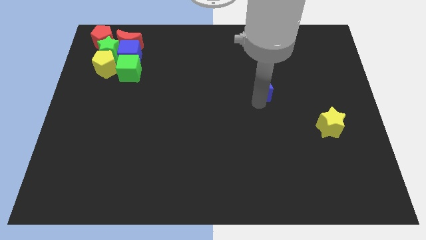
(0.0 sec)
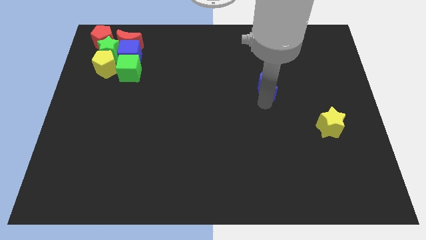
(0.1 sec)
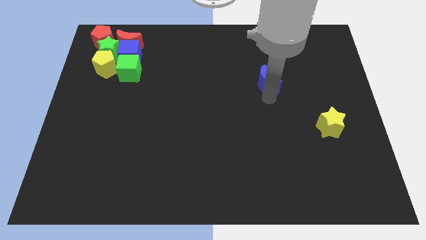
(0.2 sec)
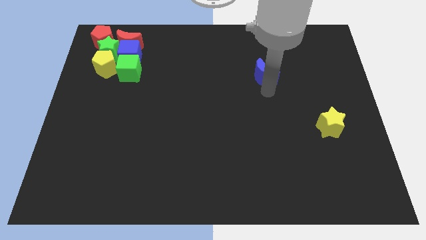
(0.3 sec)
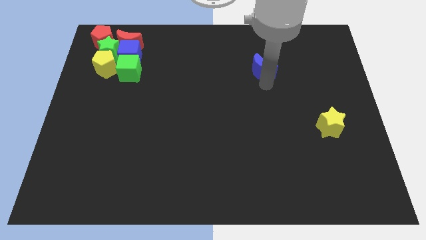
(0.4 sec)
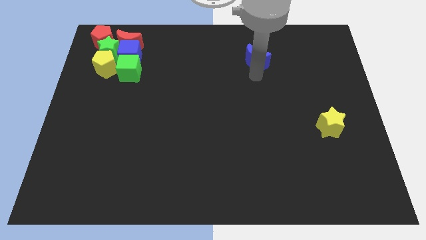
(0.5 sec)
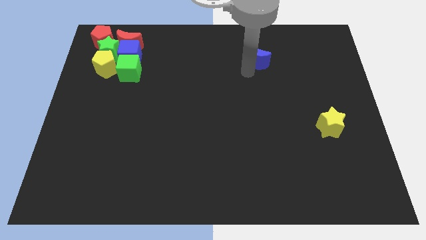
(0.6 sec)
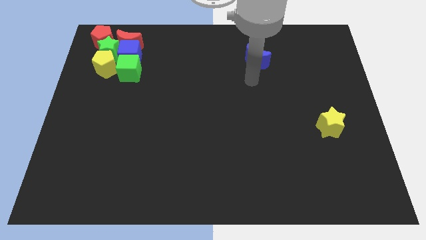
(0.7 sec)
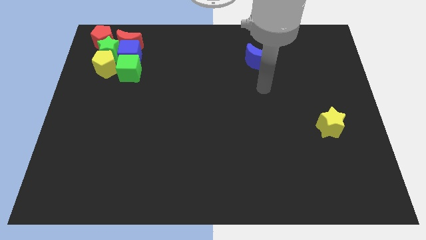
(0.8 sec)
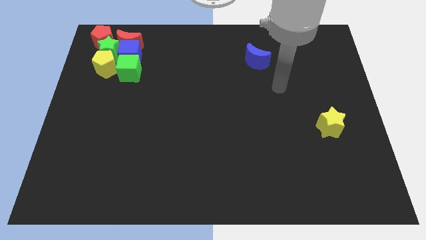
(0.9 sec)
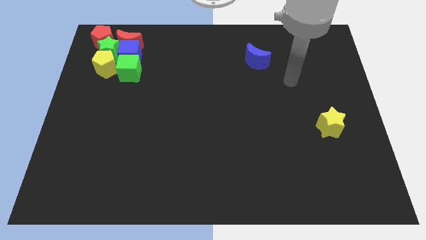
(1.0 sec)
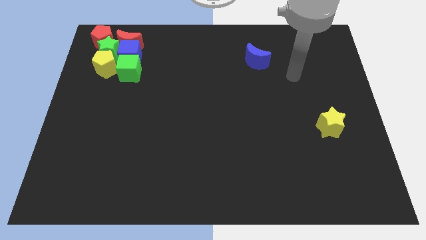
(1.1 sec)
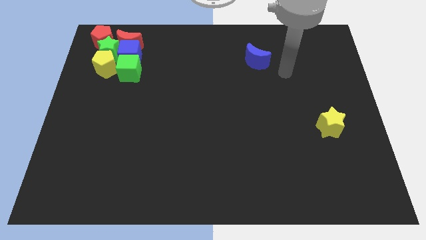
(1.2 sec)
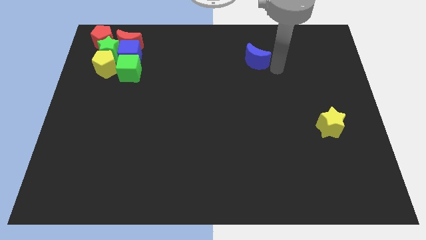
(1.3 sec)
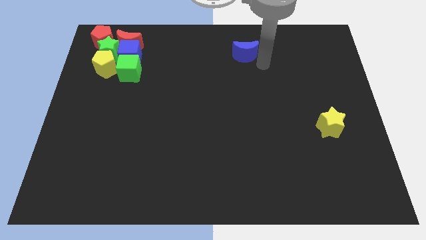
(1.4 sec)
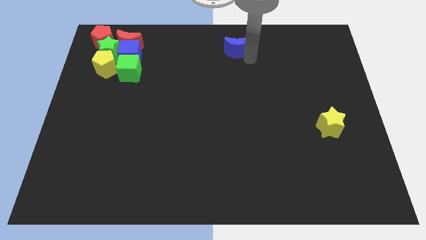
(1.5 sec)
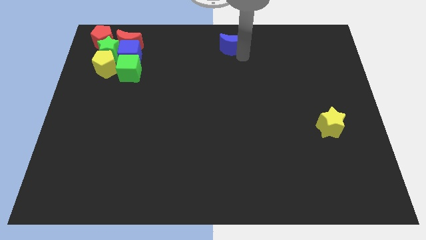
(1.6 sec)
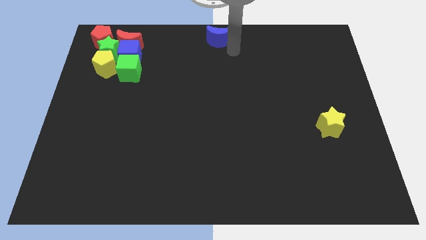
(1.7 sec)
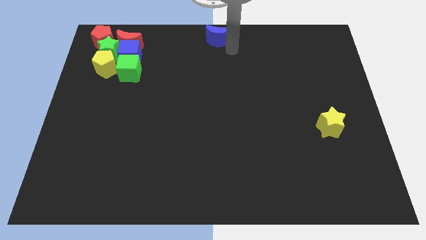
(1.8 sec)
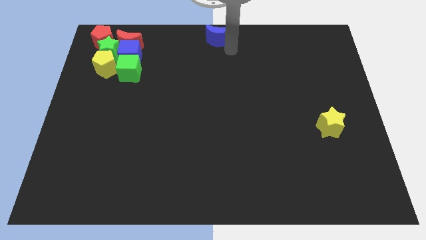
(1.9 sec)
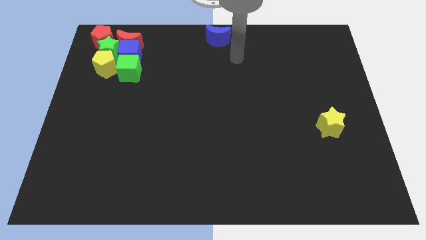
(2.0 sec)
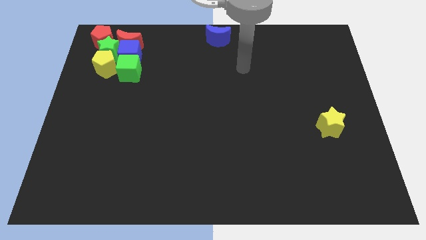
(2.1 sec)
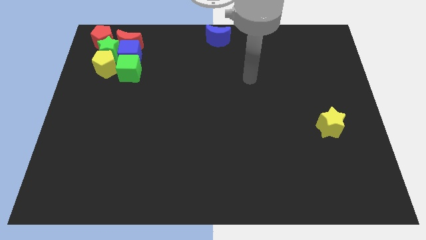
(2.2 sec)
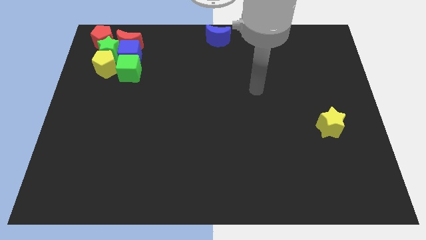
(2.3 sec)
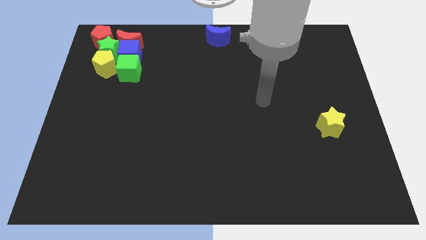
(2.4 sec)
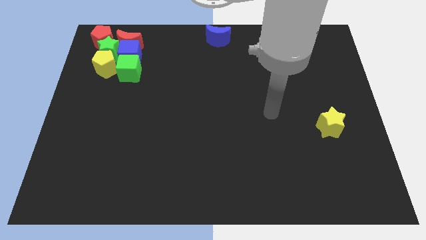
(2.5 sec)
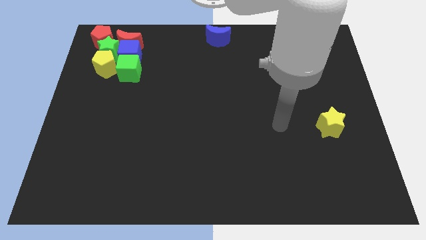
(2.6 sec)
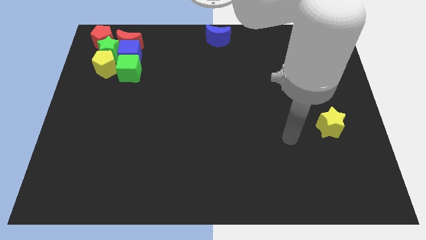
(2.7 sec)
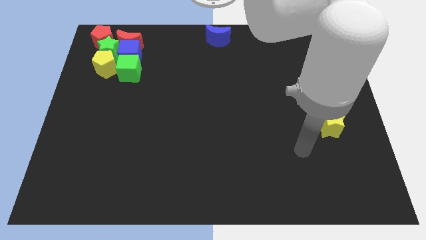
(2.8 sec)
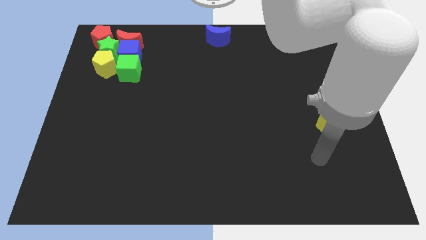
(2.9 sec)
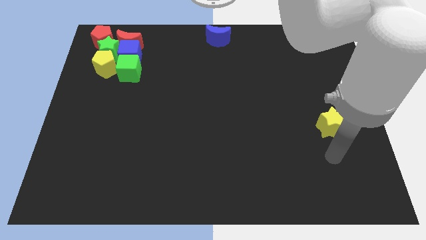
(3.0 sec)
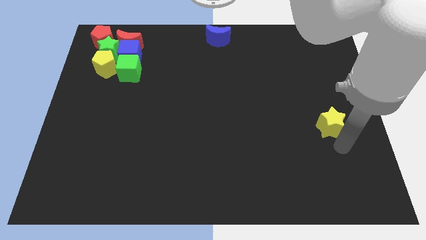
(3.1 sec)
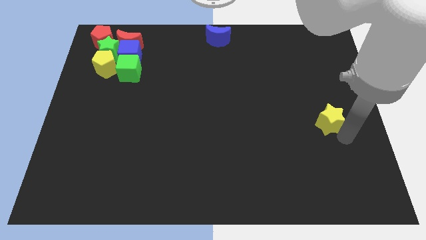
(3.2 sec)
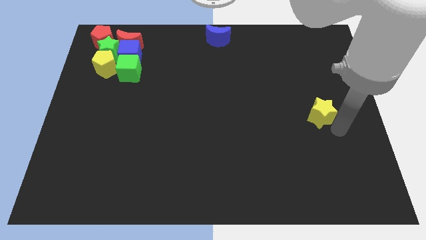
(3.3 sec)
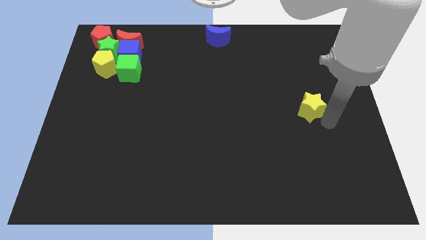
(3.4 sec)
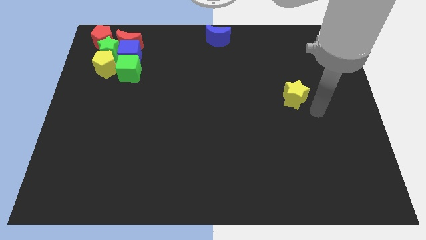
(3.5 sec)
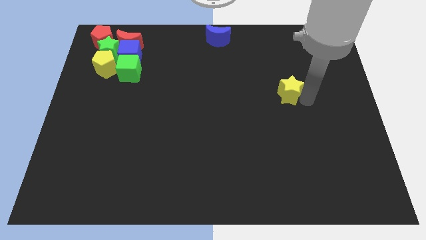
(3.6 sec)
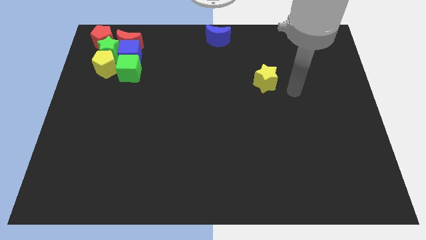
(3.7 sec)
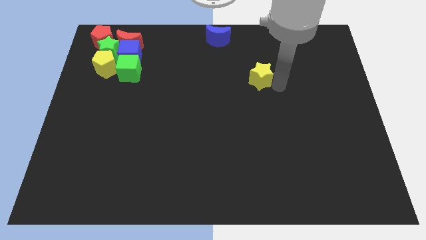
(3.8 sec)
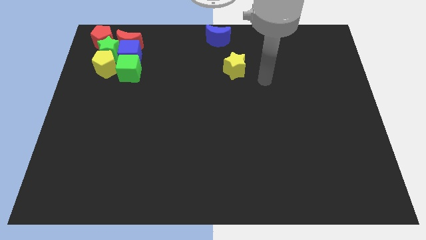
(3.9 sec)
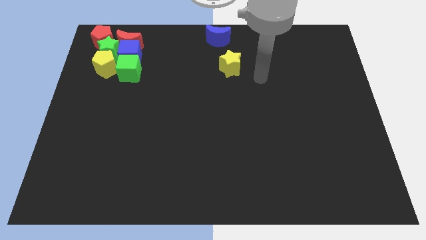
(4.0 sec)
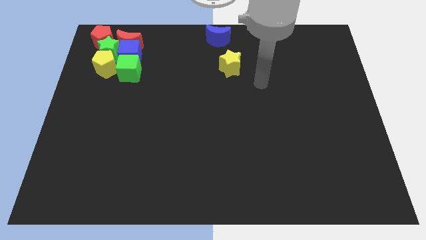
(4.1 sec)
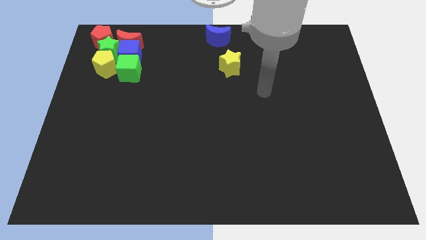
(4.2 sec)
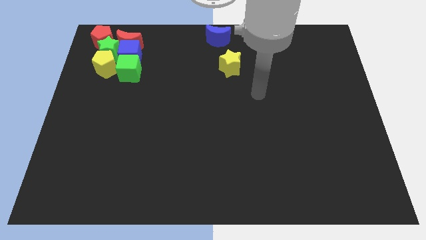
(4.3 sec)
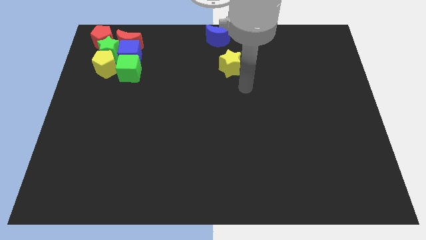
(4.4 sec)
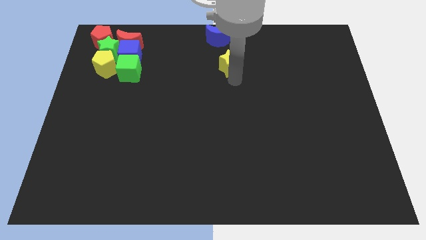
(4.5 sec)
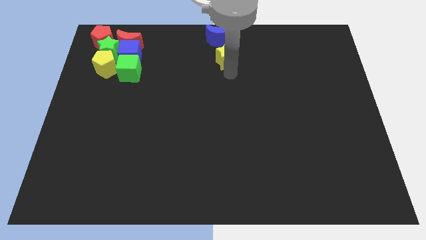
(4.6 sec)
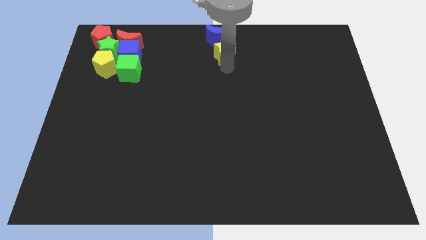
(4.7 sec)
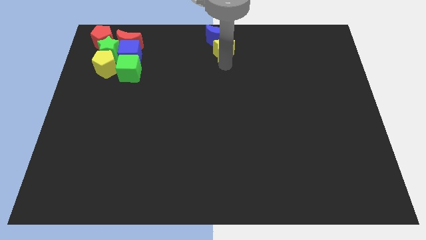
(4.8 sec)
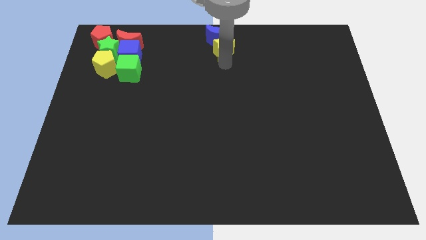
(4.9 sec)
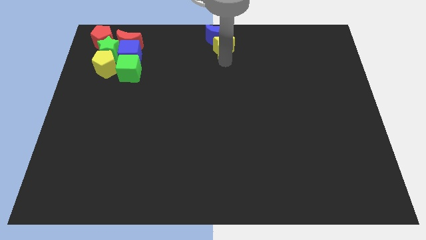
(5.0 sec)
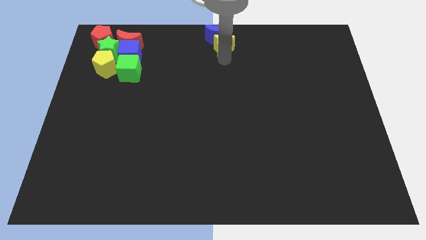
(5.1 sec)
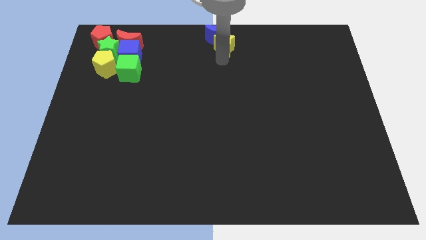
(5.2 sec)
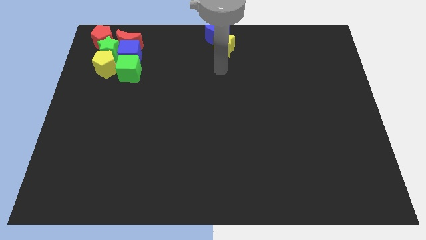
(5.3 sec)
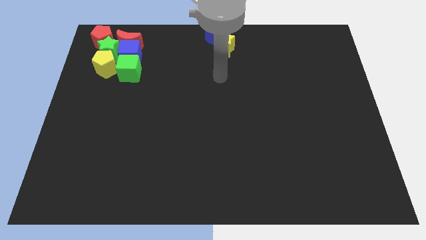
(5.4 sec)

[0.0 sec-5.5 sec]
push the yellow star into the blue moon

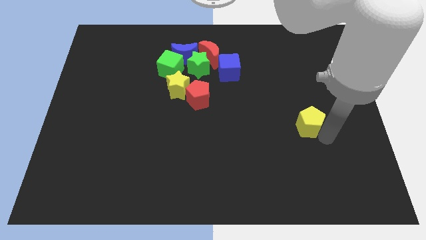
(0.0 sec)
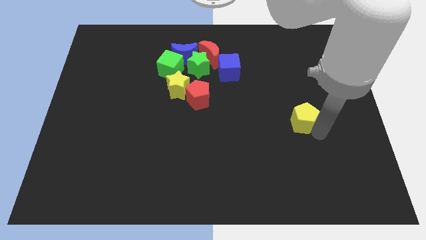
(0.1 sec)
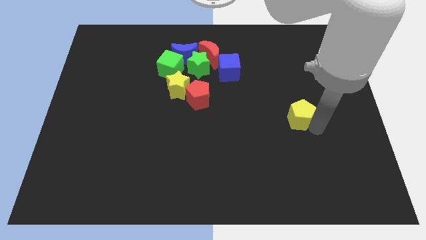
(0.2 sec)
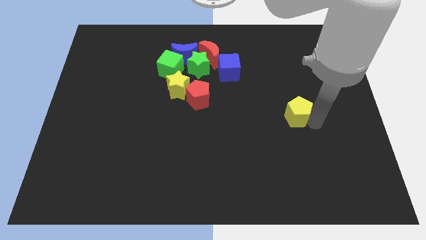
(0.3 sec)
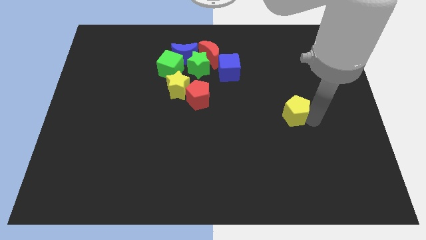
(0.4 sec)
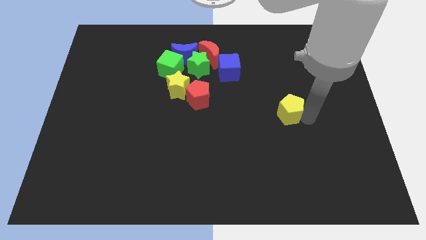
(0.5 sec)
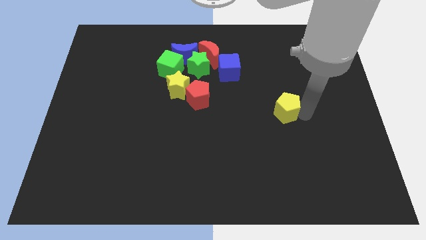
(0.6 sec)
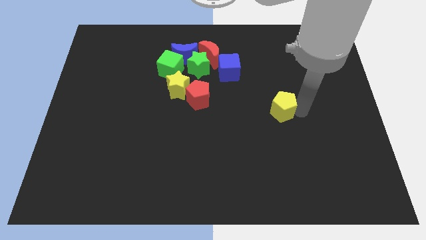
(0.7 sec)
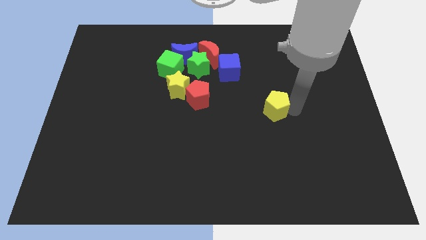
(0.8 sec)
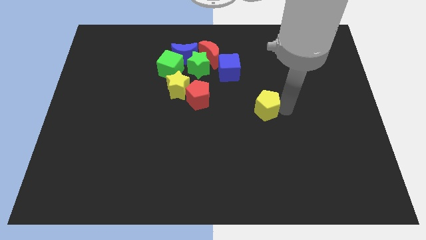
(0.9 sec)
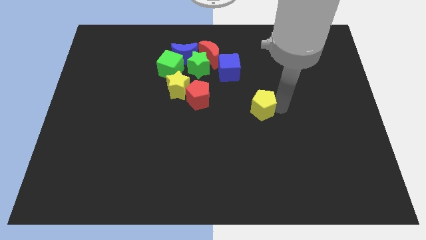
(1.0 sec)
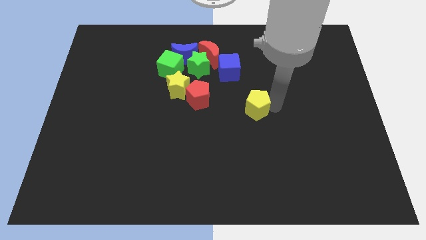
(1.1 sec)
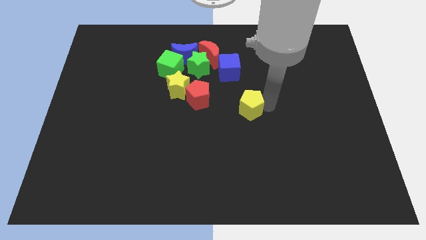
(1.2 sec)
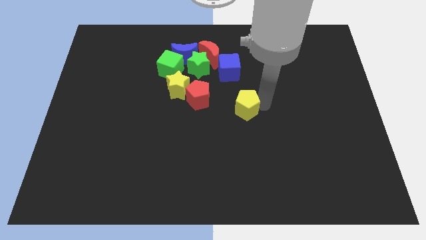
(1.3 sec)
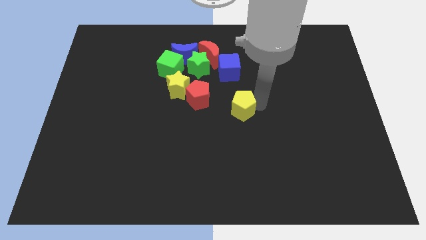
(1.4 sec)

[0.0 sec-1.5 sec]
move yellow pentagon towards the group of objects

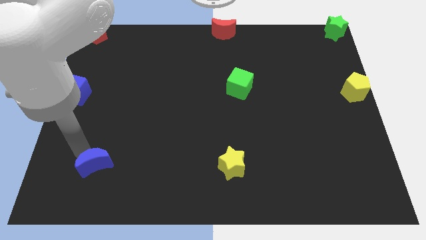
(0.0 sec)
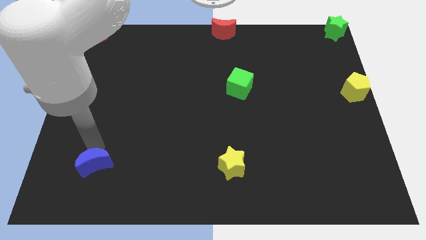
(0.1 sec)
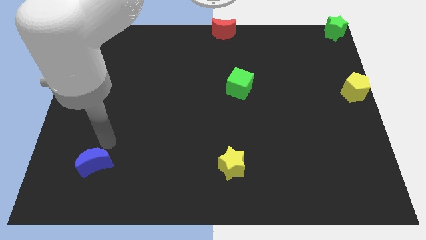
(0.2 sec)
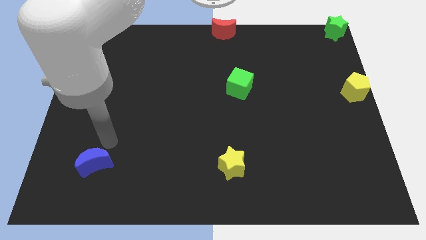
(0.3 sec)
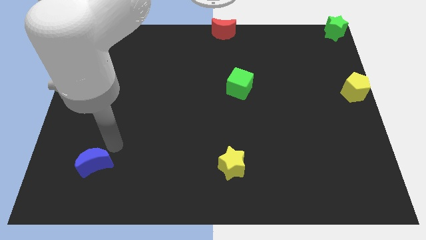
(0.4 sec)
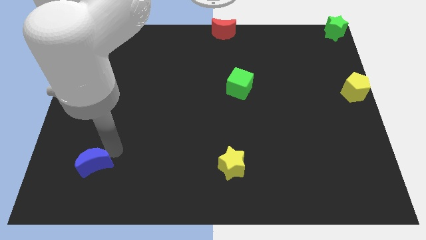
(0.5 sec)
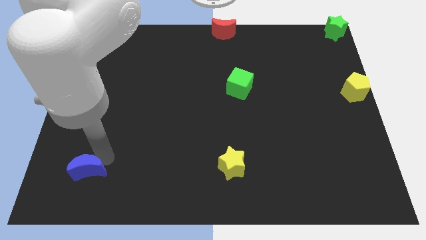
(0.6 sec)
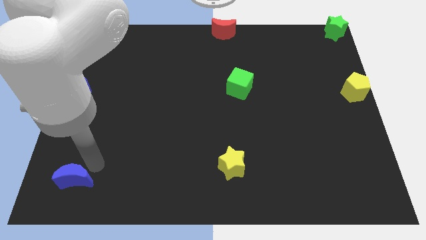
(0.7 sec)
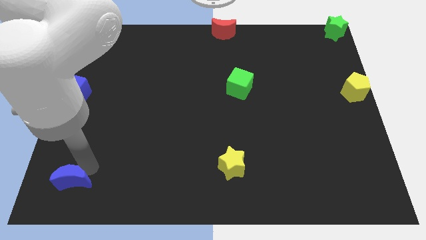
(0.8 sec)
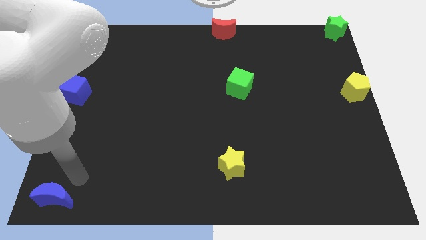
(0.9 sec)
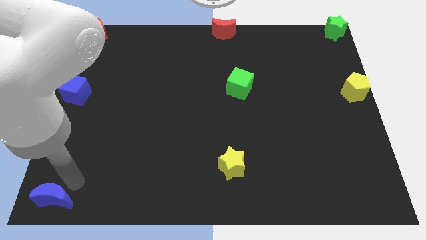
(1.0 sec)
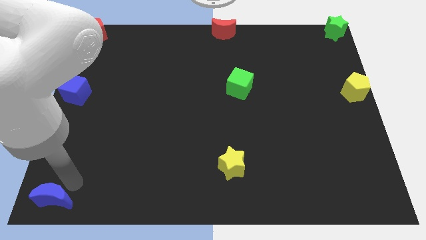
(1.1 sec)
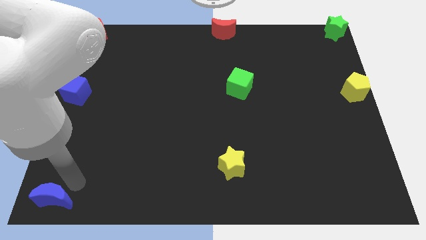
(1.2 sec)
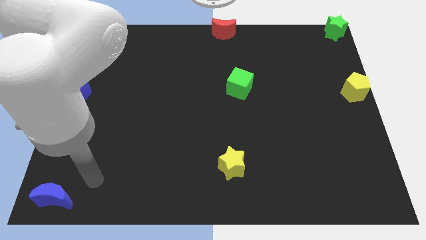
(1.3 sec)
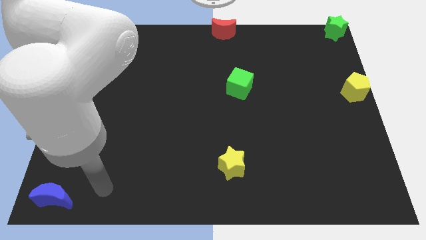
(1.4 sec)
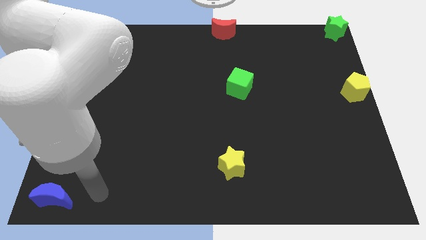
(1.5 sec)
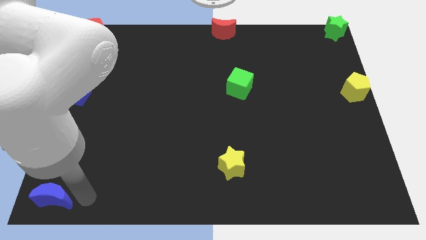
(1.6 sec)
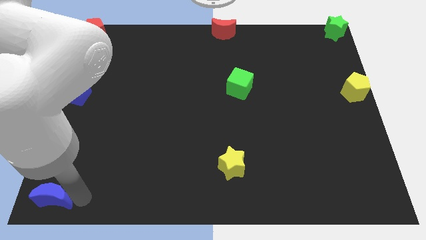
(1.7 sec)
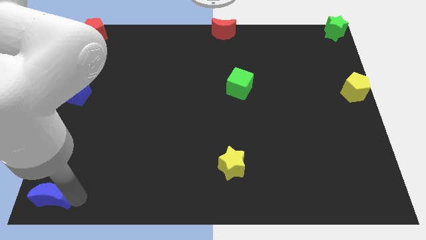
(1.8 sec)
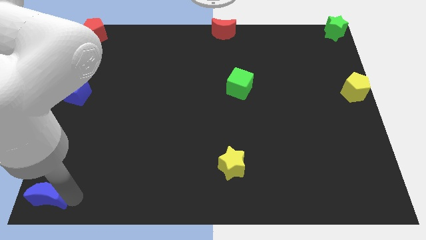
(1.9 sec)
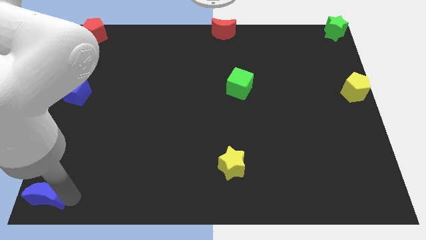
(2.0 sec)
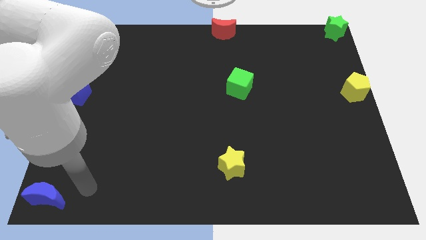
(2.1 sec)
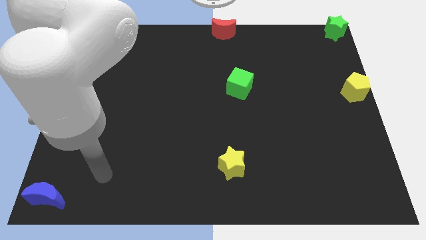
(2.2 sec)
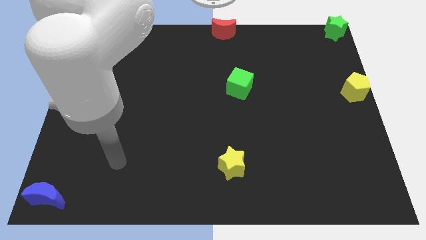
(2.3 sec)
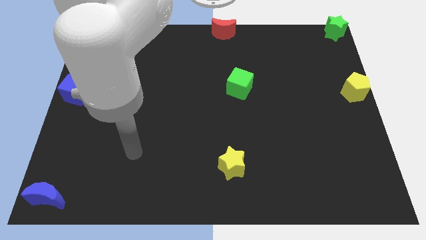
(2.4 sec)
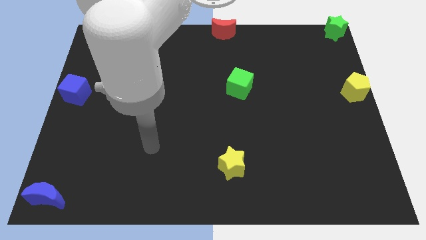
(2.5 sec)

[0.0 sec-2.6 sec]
push the blue crescent to the bottom left of the board
